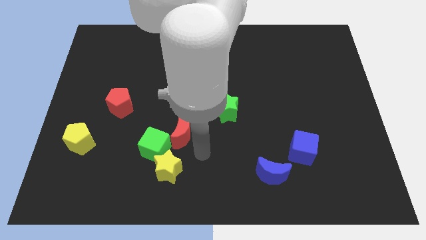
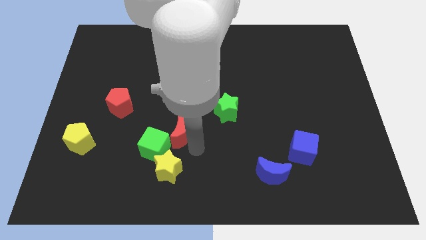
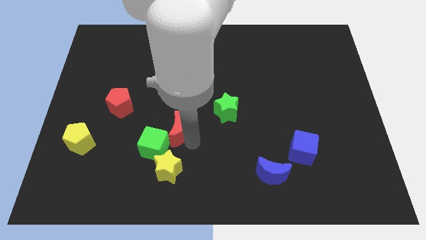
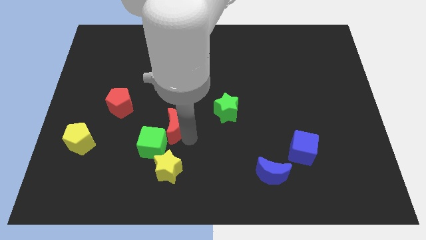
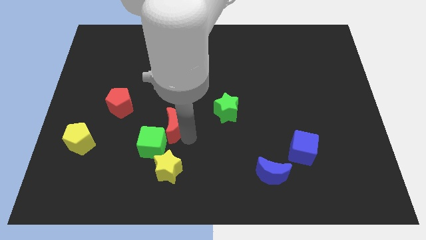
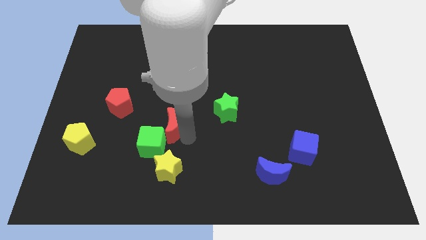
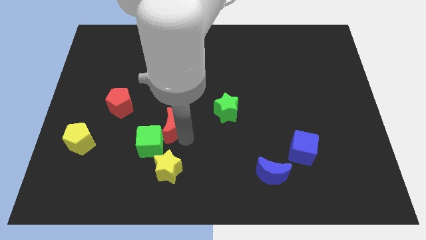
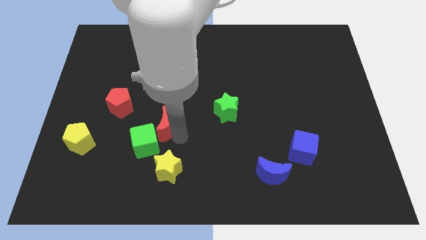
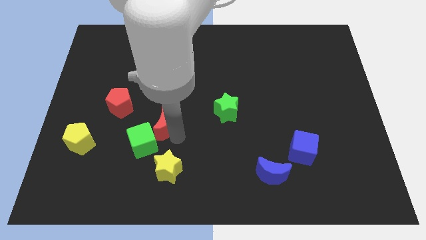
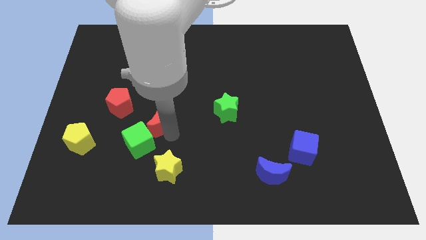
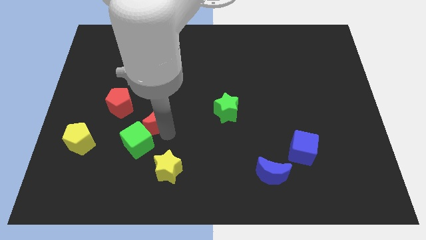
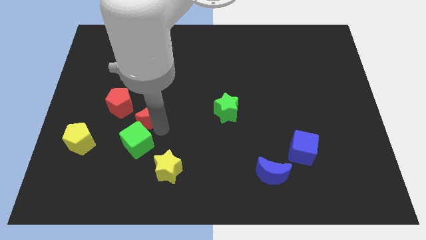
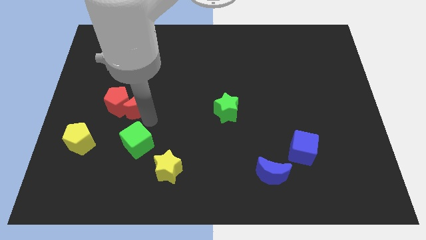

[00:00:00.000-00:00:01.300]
place the red crescent at the bottom right of the red pentagon

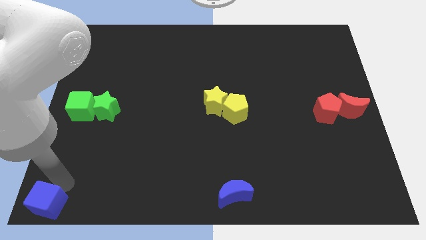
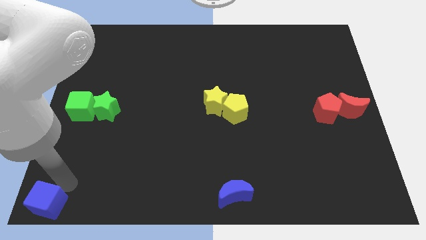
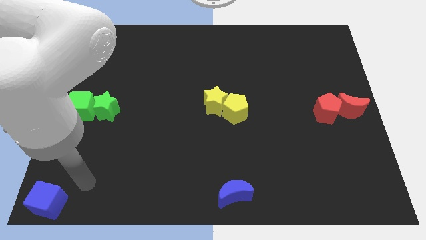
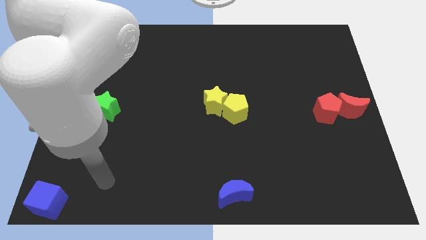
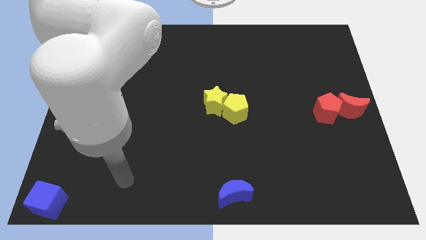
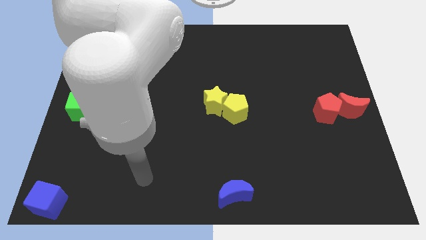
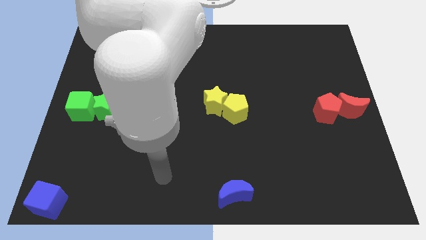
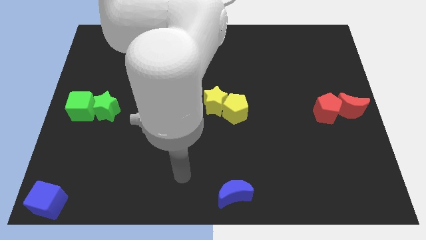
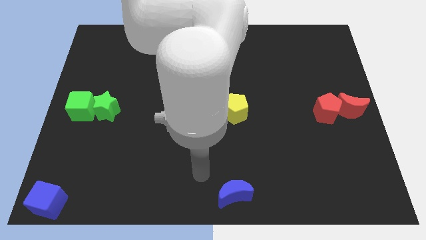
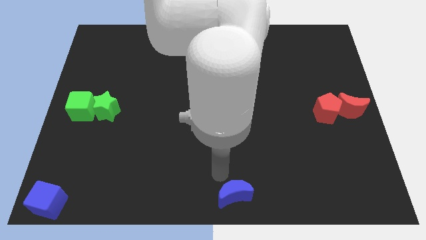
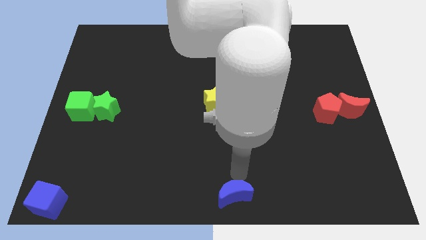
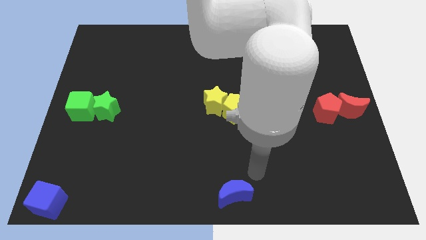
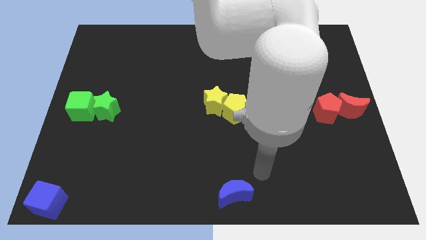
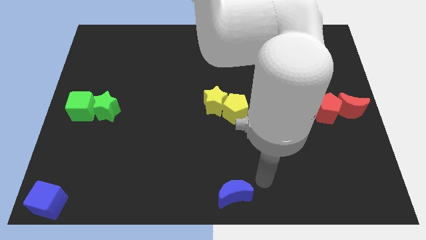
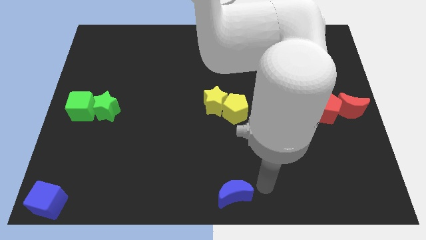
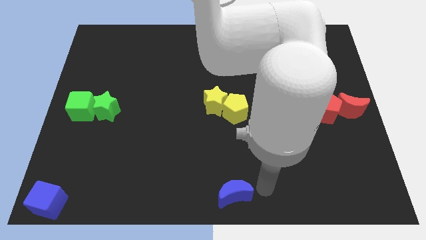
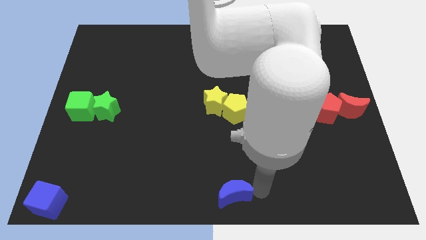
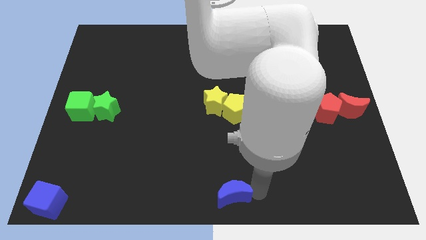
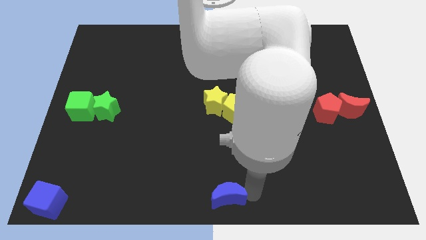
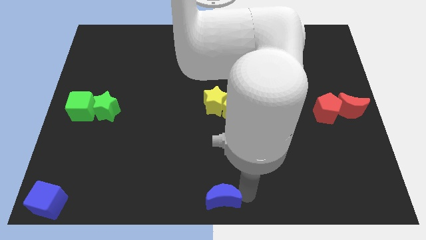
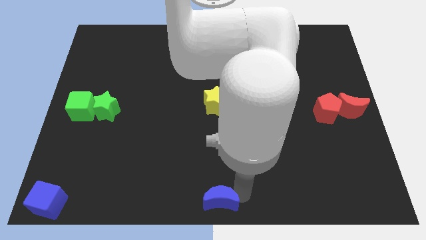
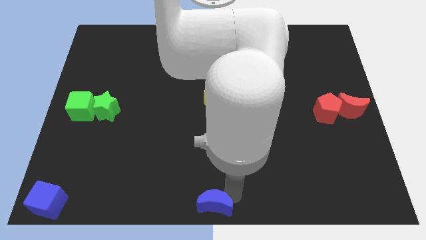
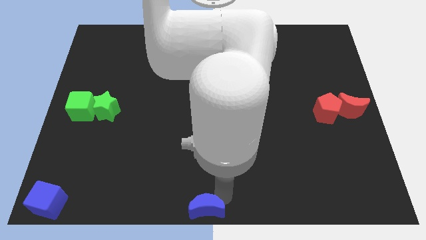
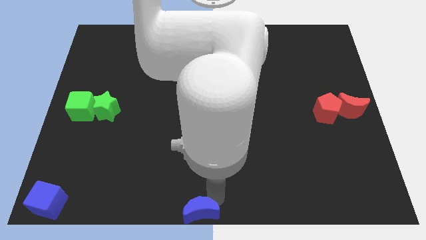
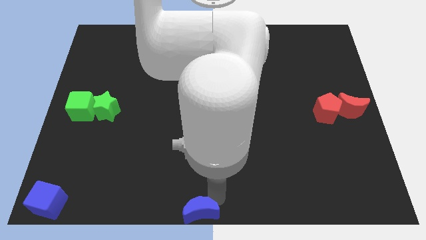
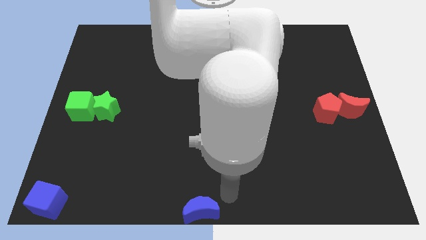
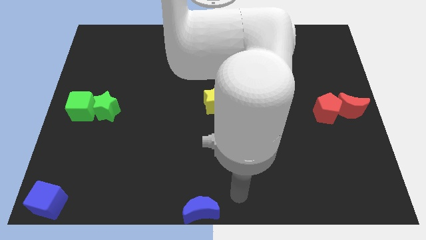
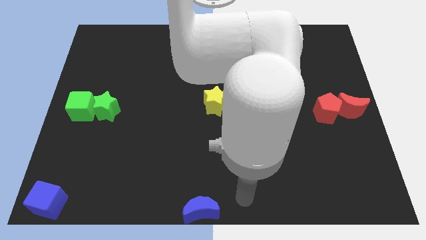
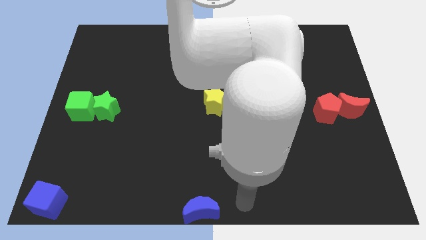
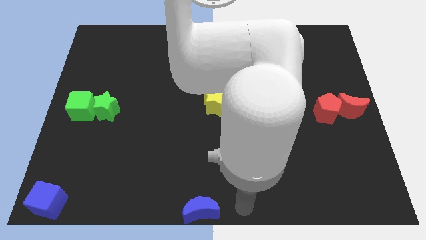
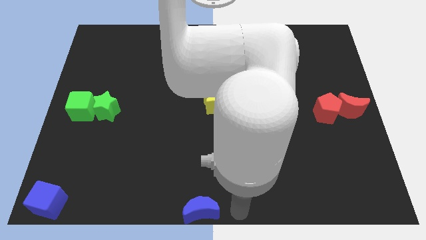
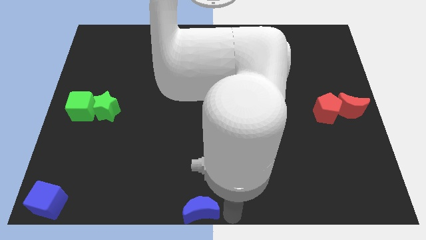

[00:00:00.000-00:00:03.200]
push the blue crescent at the bottom center of the table

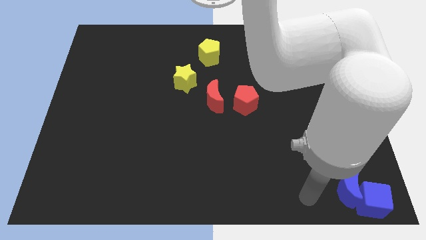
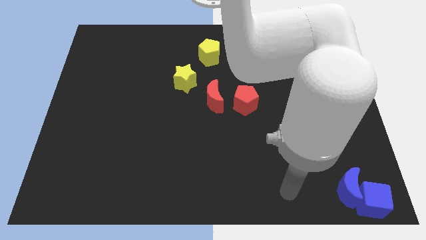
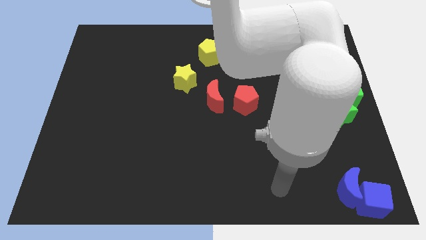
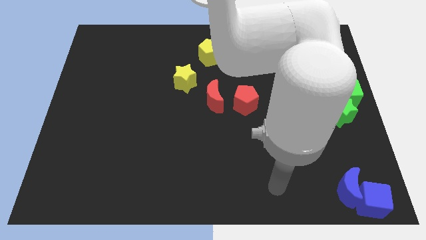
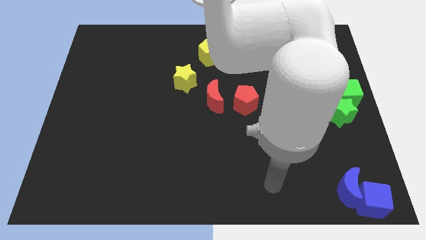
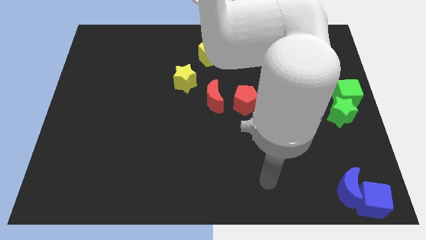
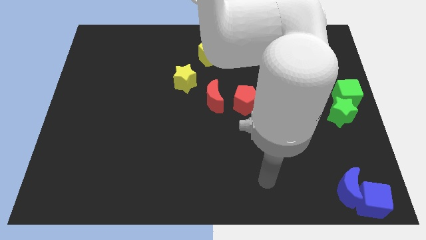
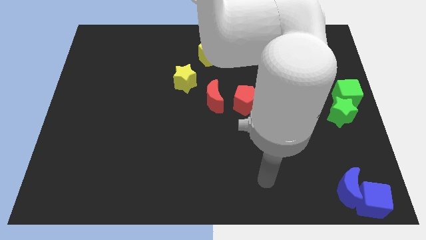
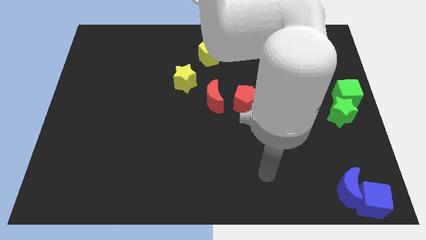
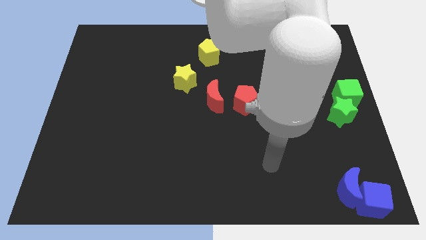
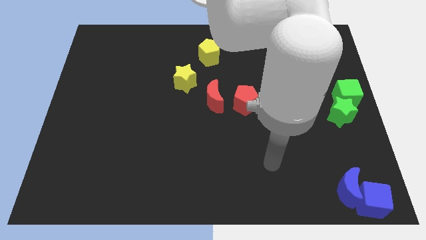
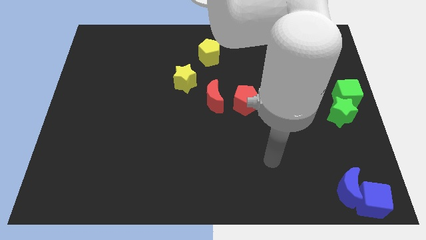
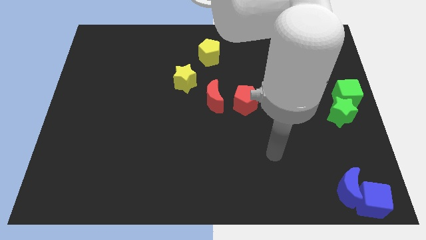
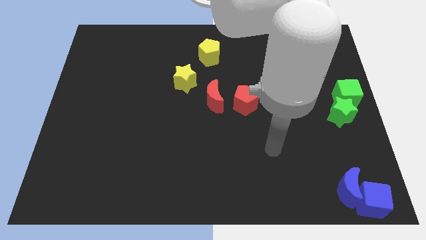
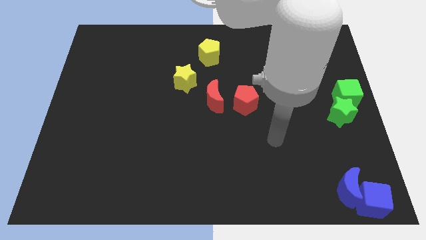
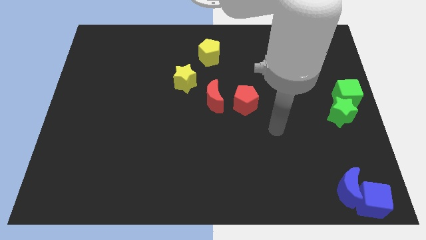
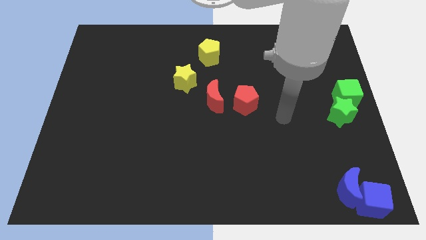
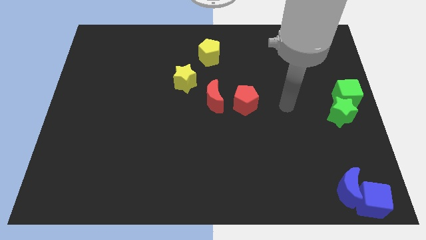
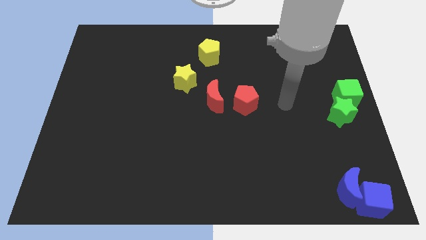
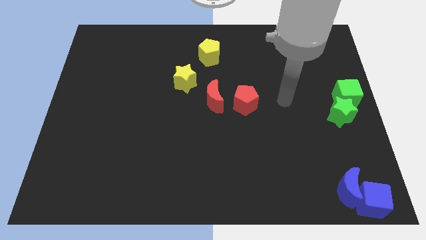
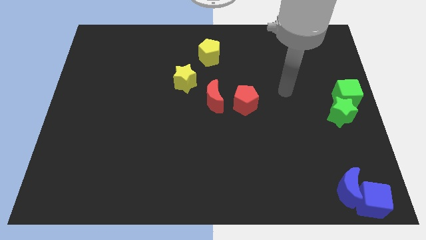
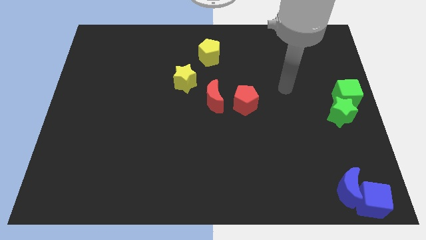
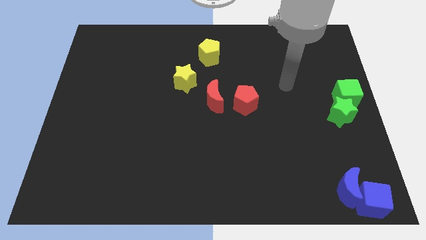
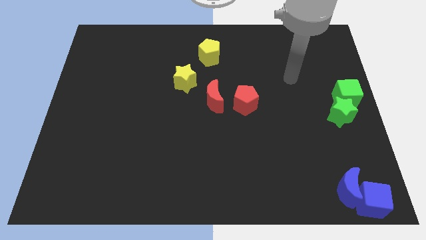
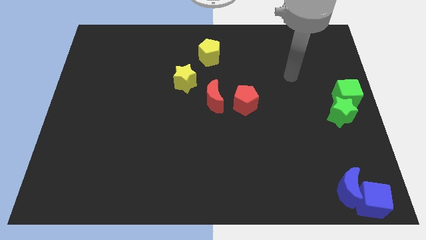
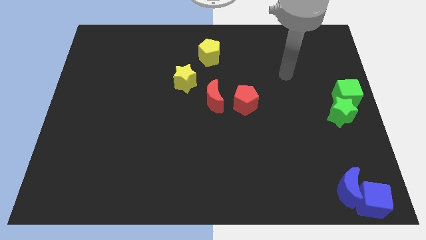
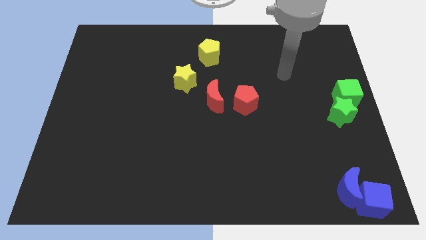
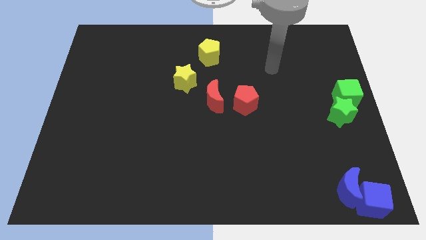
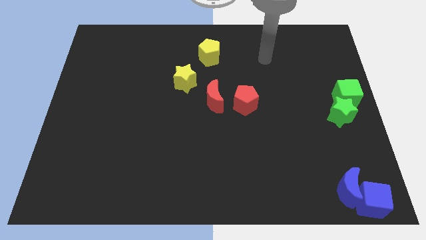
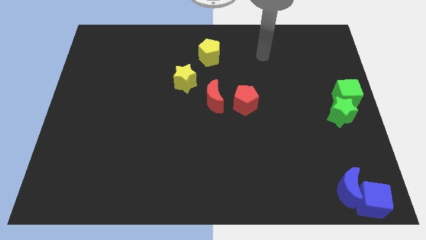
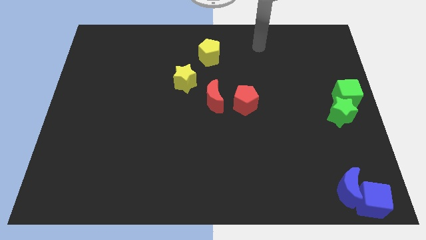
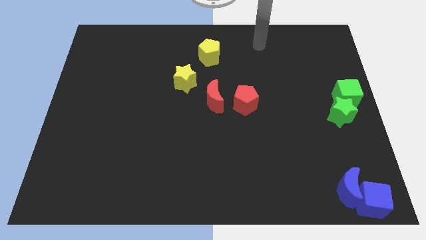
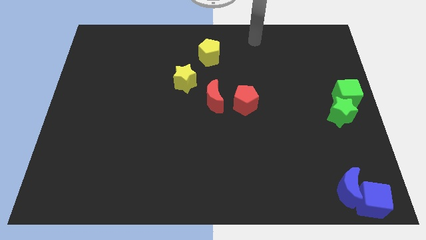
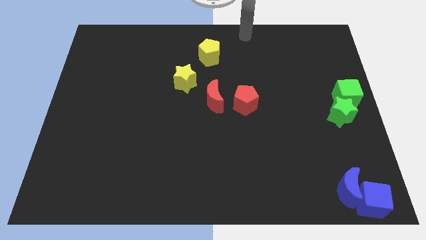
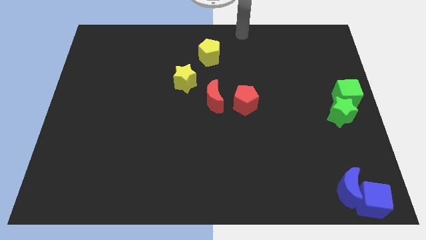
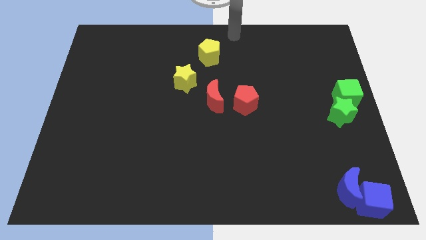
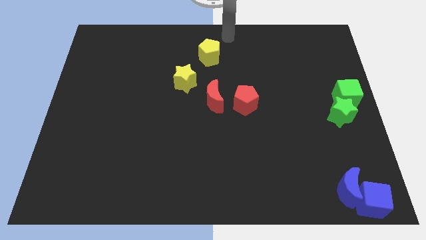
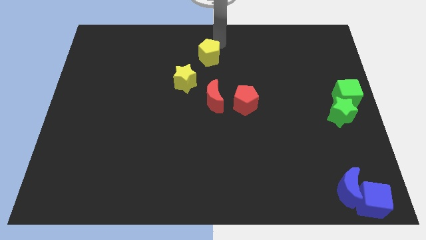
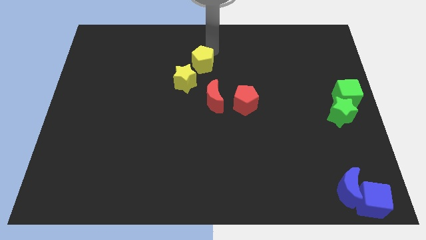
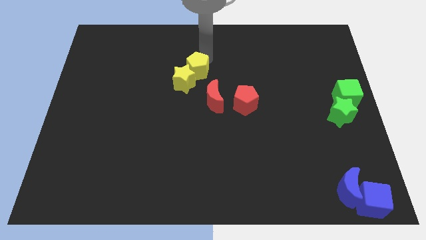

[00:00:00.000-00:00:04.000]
move the yellow pentagon above the yellow star

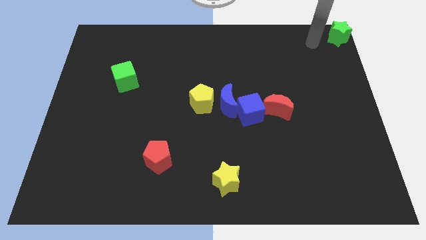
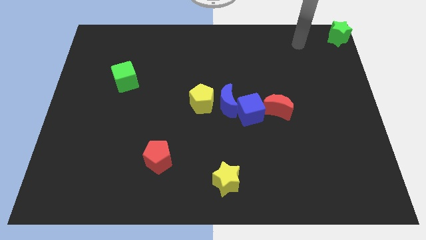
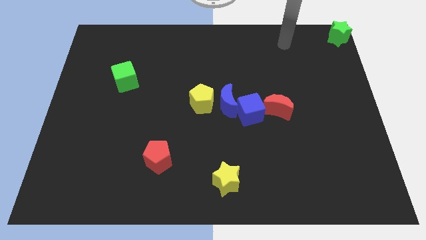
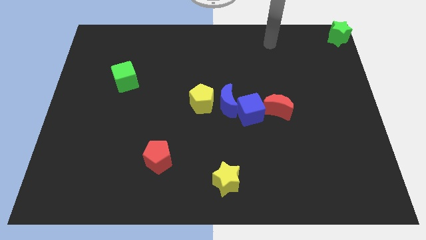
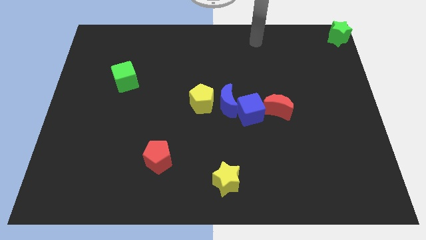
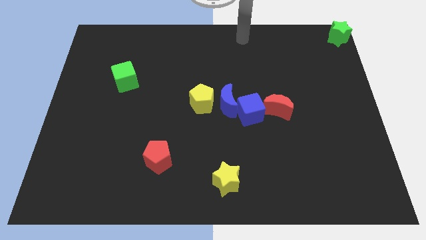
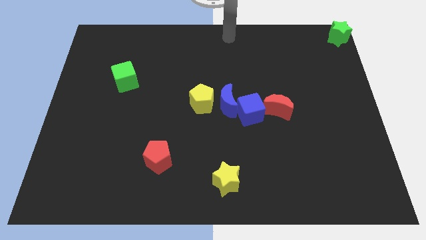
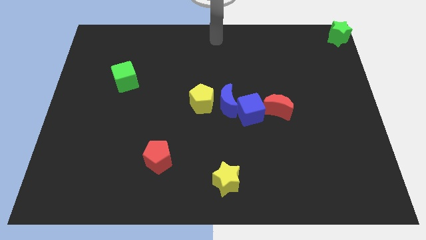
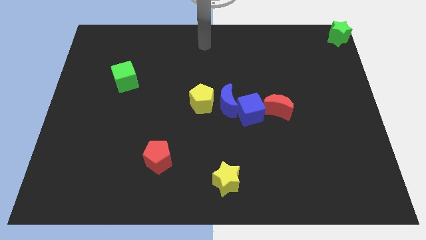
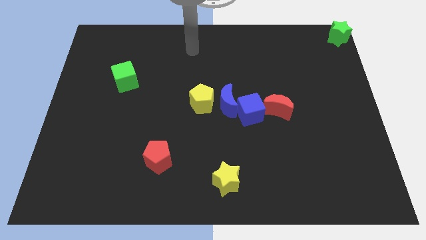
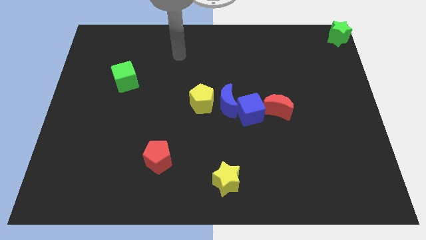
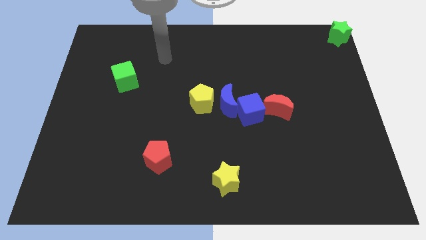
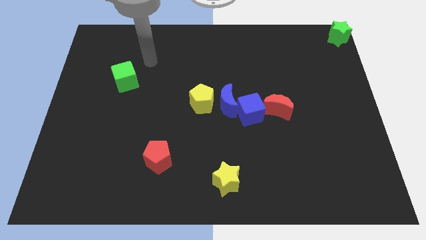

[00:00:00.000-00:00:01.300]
move your arm away from the green star
